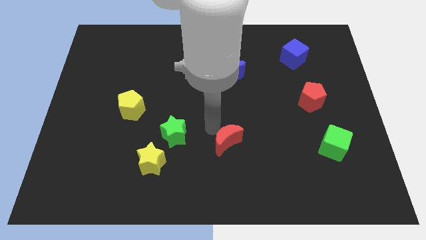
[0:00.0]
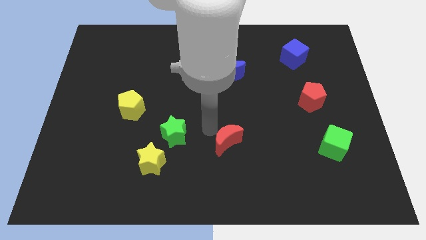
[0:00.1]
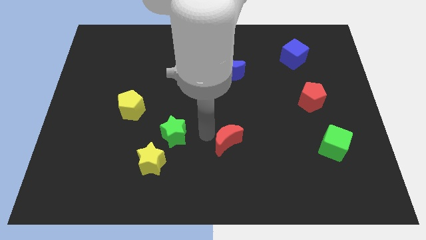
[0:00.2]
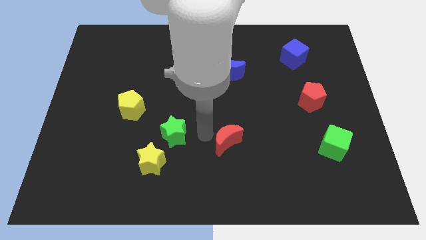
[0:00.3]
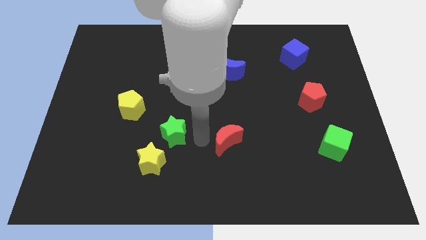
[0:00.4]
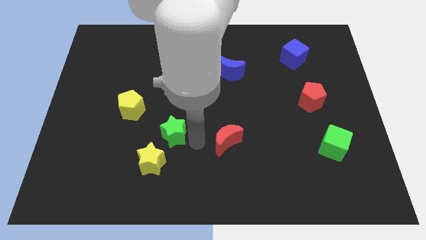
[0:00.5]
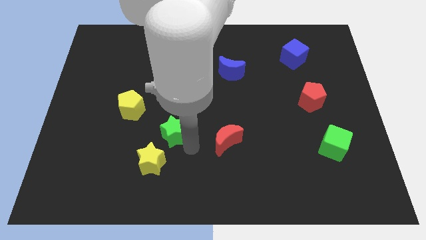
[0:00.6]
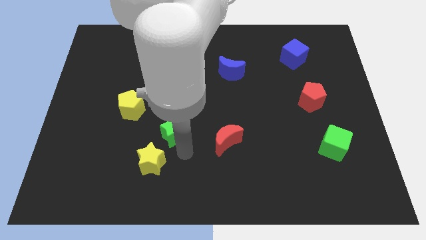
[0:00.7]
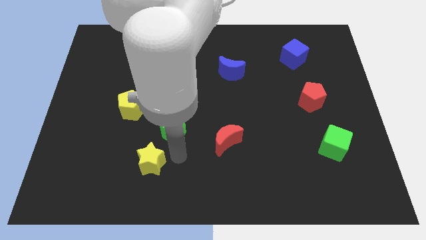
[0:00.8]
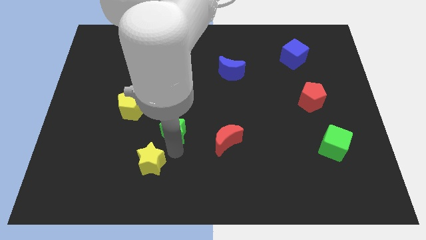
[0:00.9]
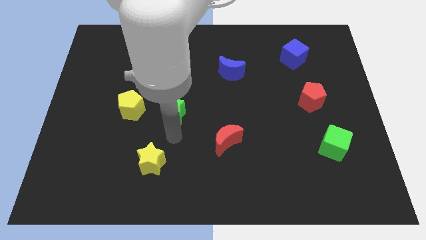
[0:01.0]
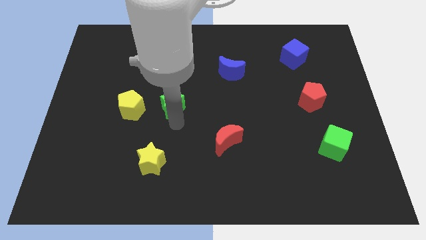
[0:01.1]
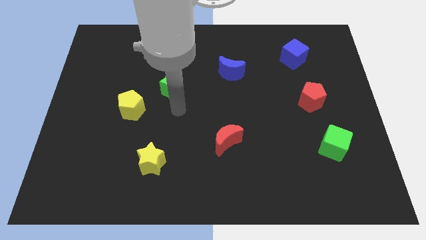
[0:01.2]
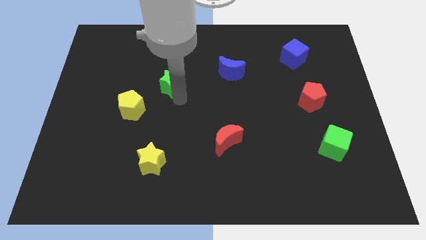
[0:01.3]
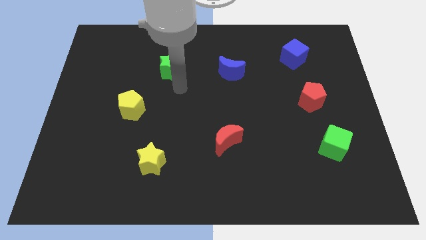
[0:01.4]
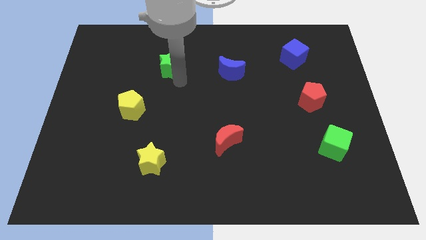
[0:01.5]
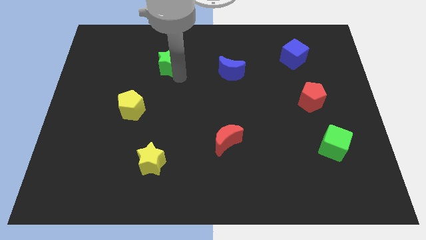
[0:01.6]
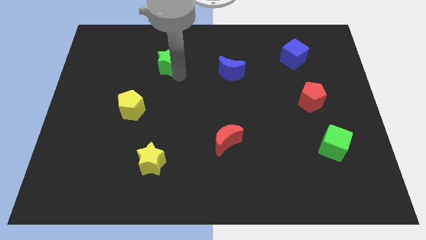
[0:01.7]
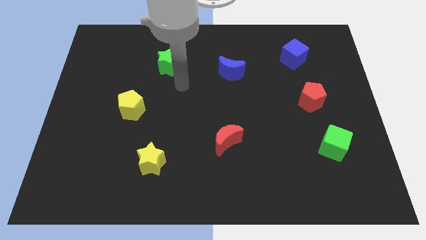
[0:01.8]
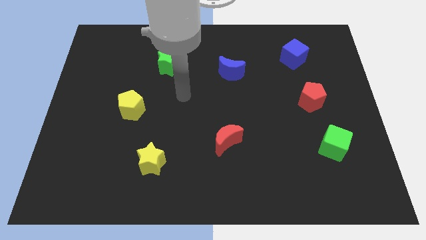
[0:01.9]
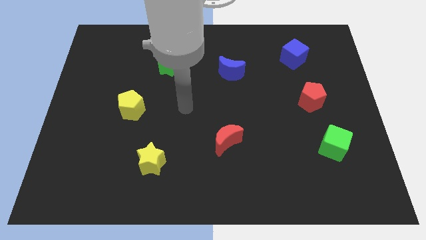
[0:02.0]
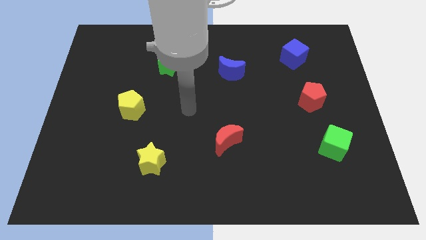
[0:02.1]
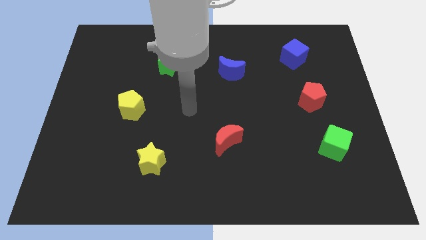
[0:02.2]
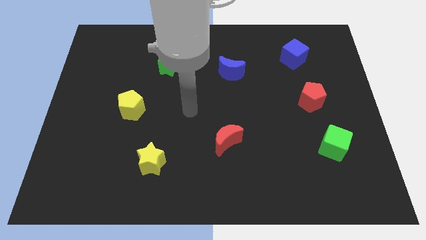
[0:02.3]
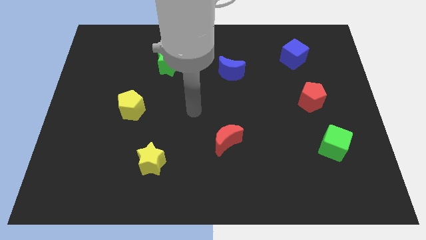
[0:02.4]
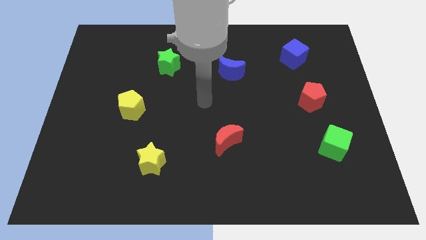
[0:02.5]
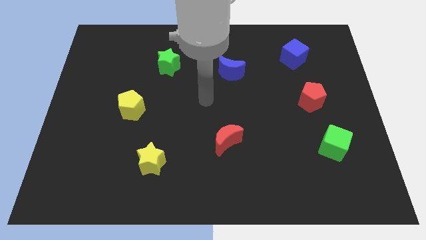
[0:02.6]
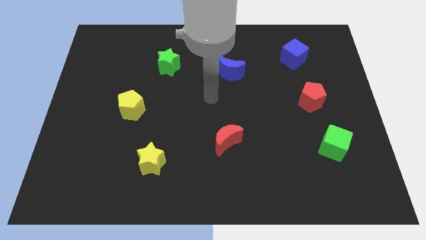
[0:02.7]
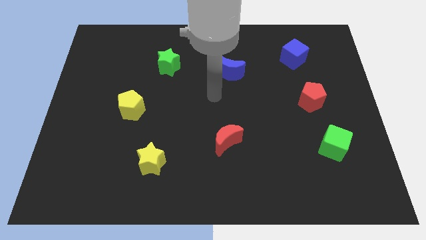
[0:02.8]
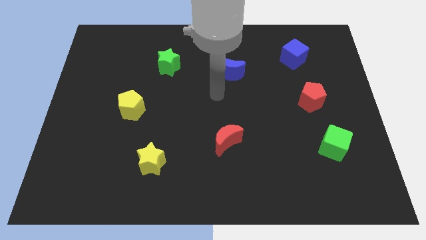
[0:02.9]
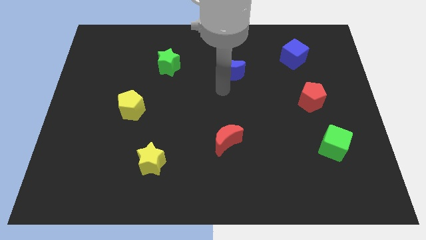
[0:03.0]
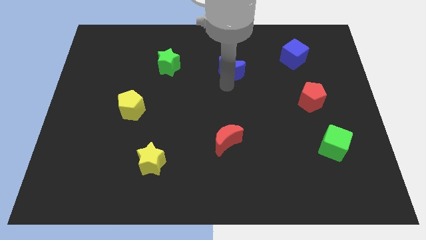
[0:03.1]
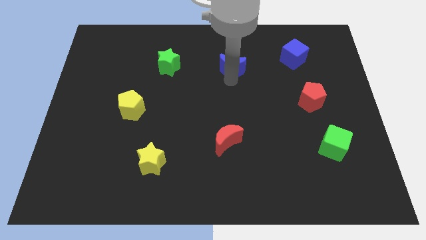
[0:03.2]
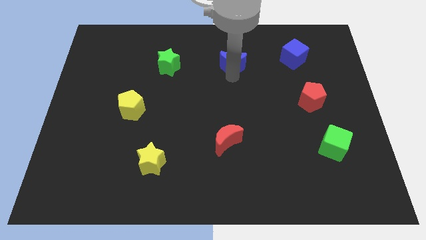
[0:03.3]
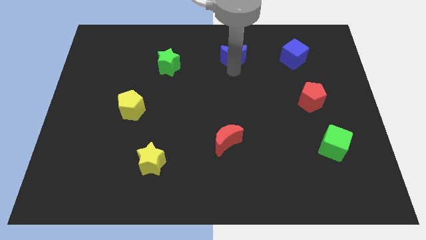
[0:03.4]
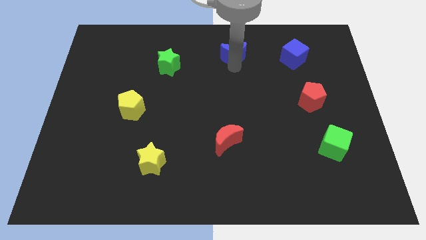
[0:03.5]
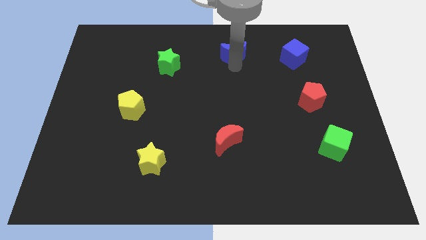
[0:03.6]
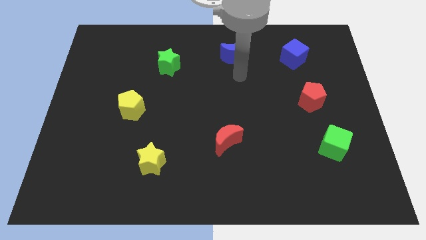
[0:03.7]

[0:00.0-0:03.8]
place the green star and blue moon to the left side of the blue cube

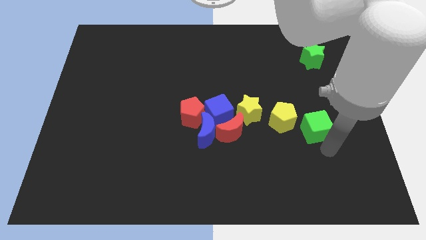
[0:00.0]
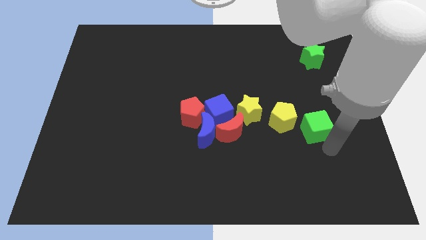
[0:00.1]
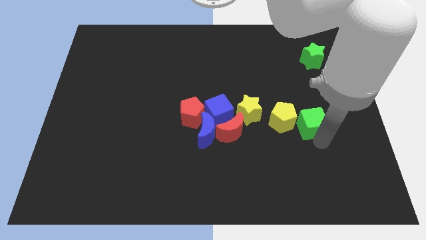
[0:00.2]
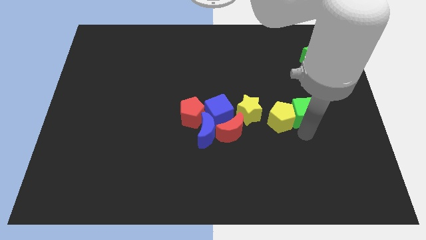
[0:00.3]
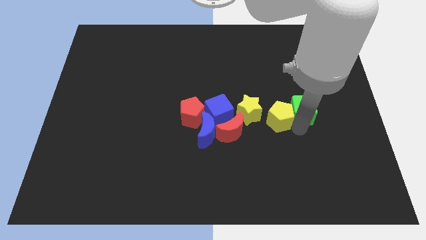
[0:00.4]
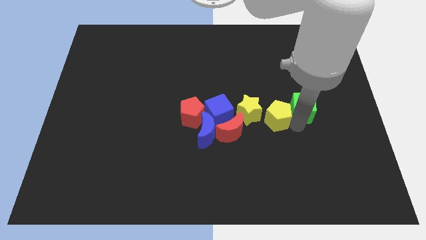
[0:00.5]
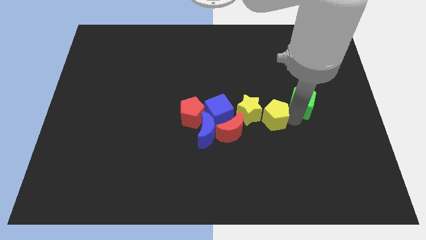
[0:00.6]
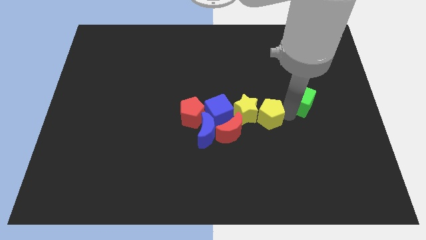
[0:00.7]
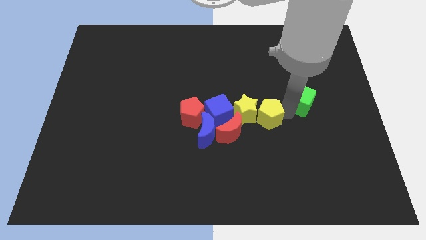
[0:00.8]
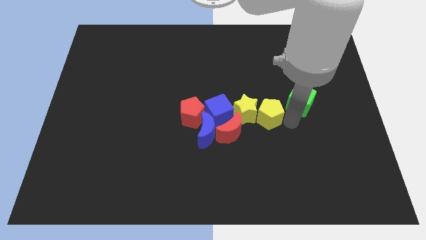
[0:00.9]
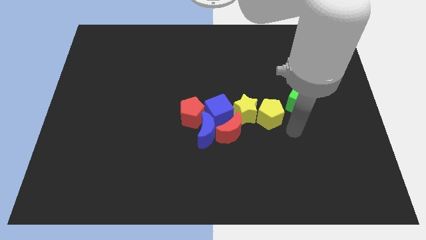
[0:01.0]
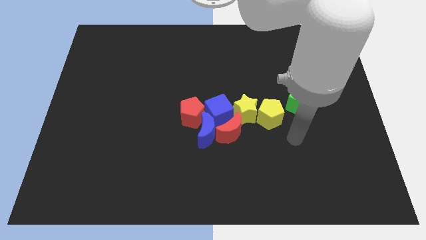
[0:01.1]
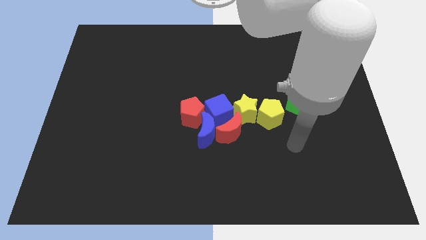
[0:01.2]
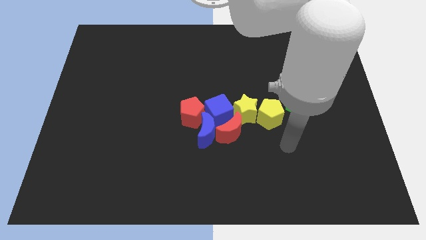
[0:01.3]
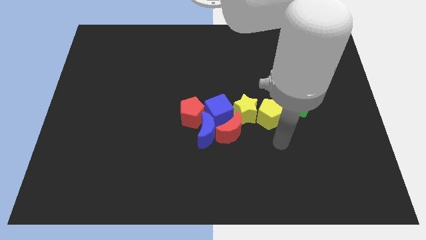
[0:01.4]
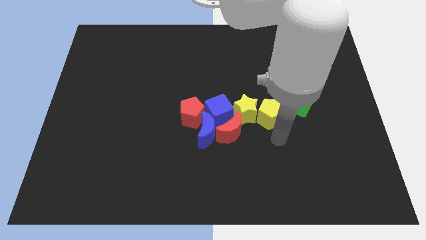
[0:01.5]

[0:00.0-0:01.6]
place green cube to the top right of the yellow pentagon

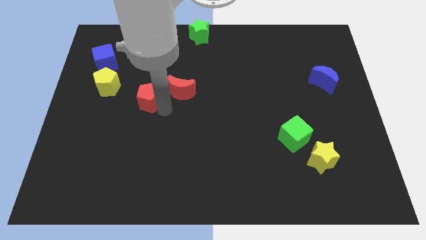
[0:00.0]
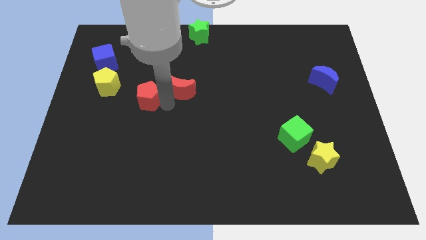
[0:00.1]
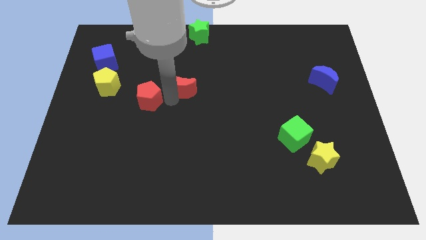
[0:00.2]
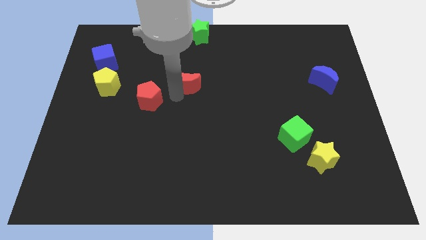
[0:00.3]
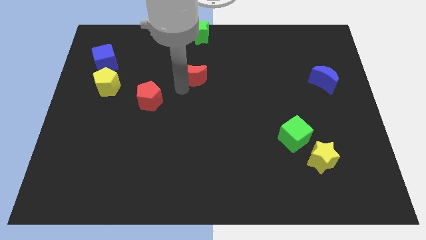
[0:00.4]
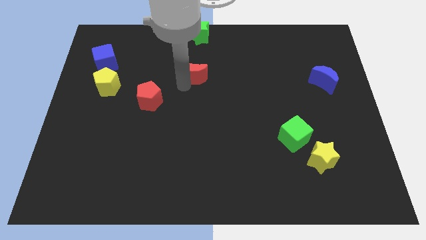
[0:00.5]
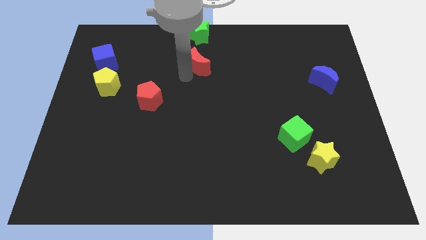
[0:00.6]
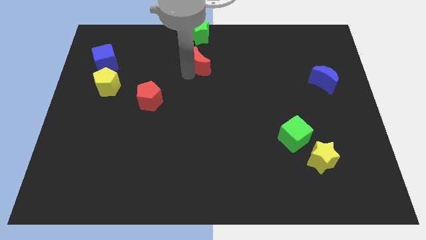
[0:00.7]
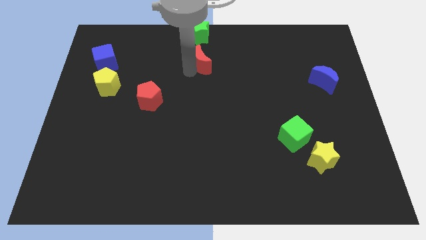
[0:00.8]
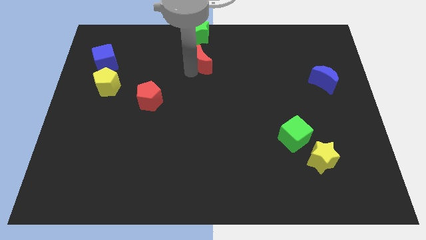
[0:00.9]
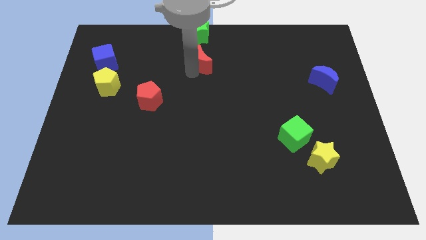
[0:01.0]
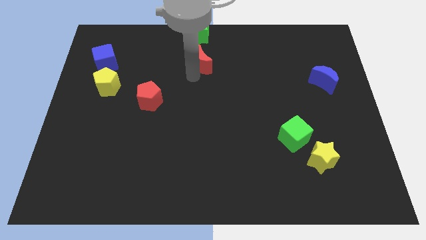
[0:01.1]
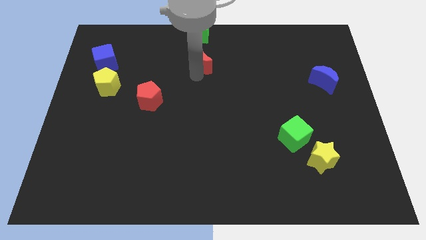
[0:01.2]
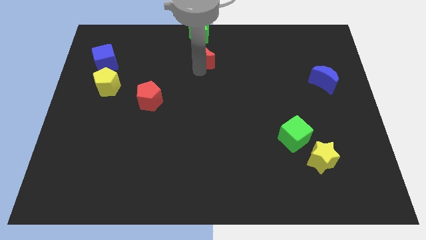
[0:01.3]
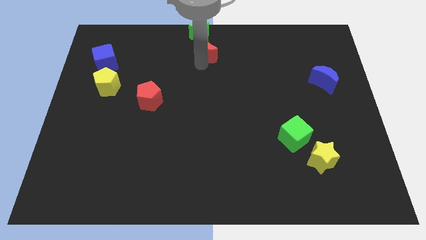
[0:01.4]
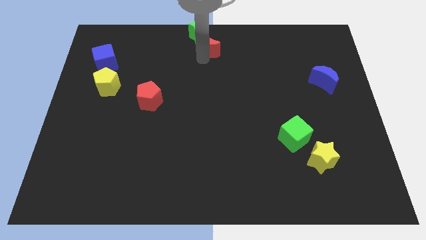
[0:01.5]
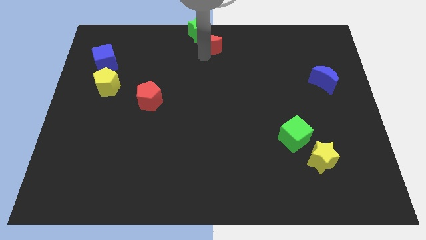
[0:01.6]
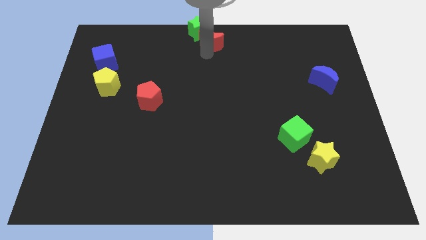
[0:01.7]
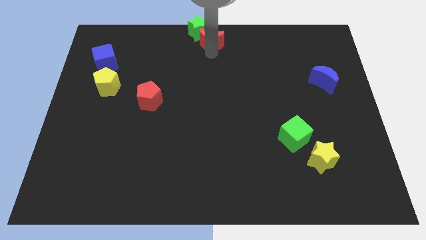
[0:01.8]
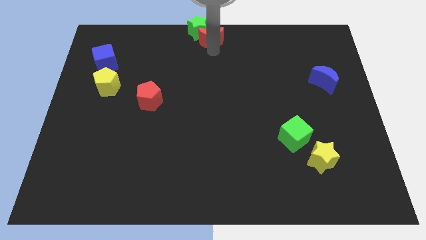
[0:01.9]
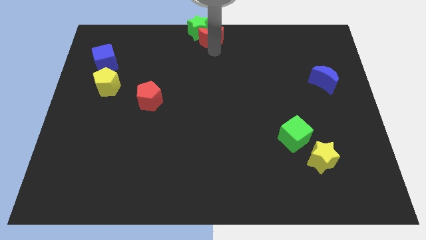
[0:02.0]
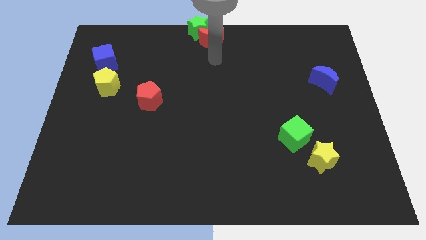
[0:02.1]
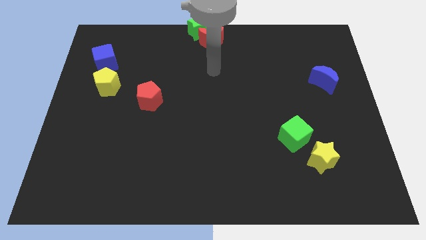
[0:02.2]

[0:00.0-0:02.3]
move the red crescent to the bottom of the green star

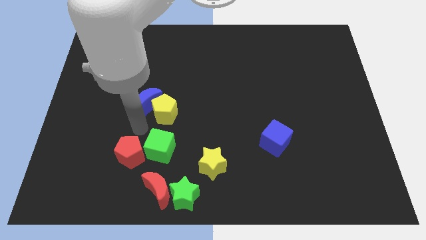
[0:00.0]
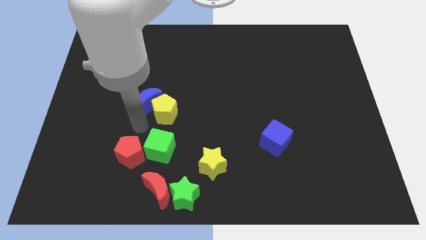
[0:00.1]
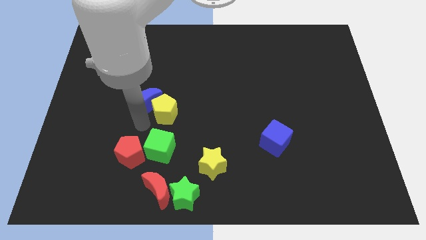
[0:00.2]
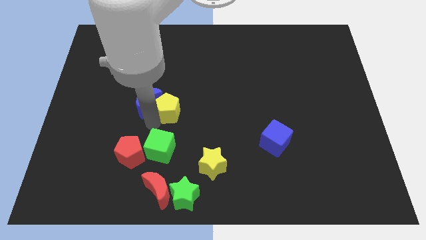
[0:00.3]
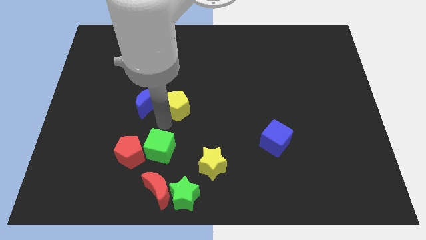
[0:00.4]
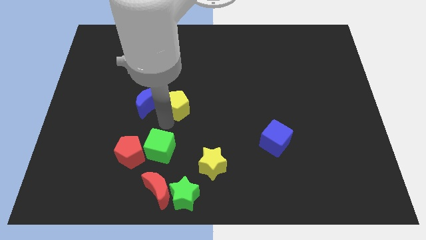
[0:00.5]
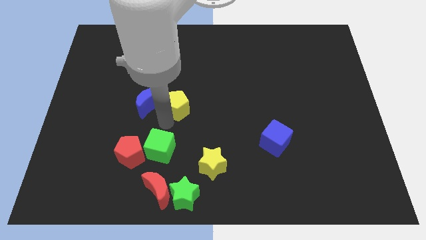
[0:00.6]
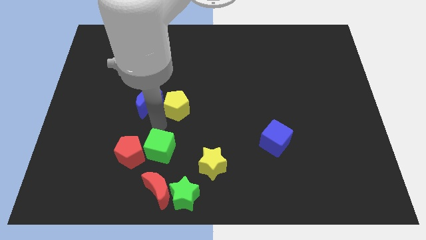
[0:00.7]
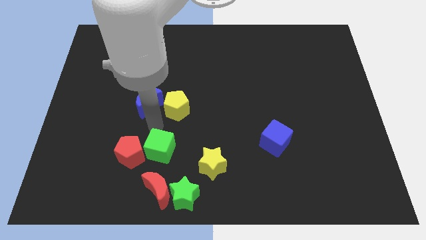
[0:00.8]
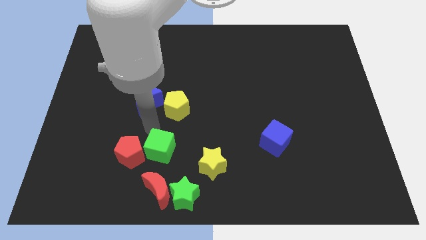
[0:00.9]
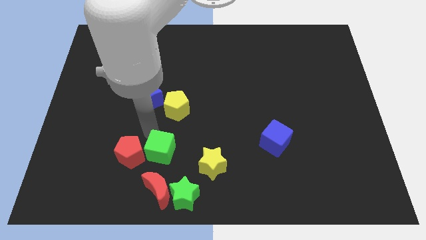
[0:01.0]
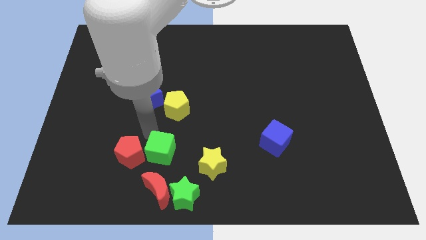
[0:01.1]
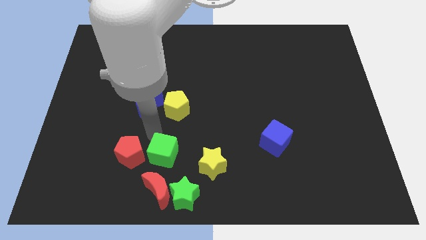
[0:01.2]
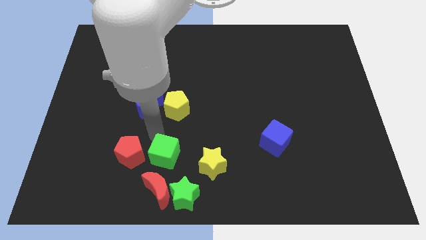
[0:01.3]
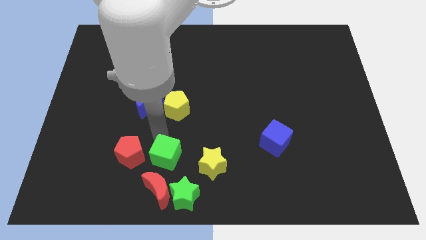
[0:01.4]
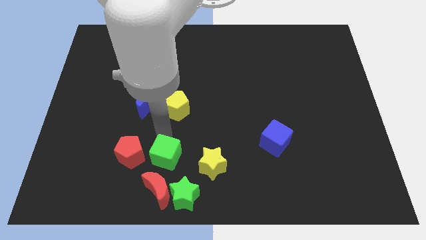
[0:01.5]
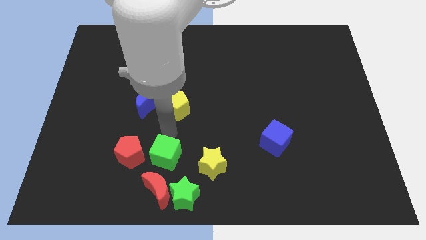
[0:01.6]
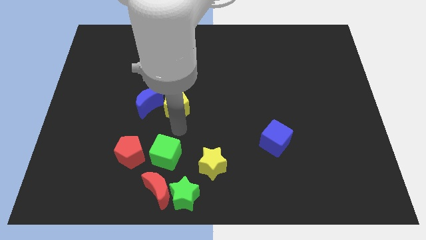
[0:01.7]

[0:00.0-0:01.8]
slightly push down the green cube
